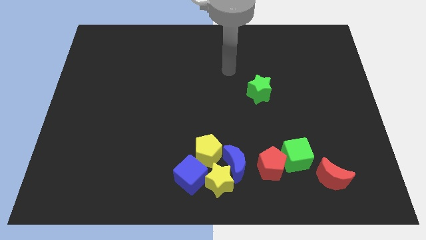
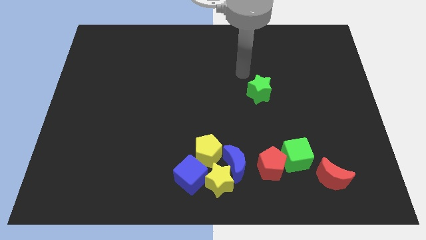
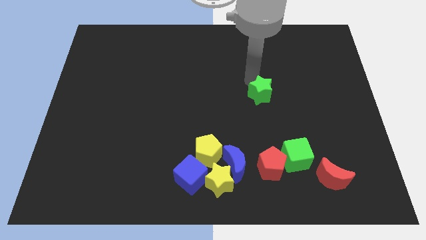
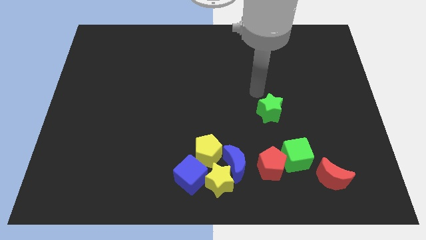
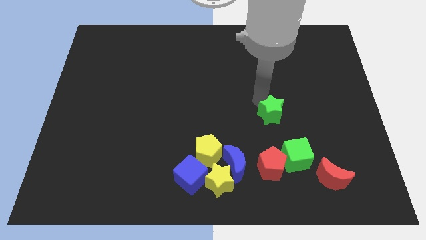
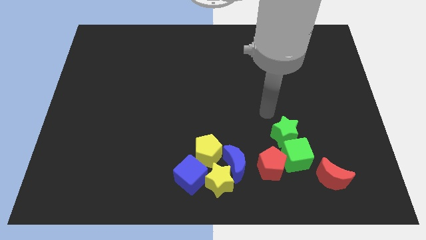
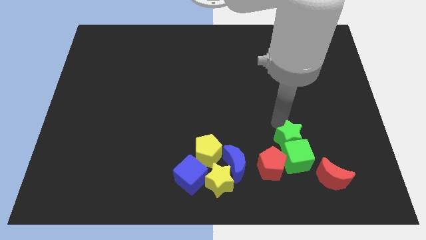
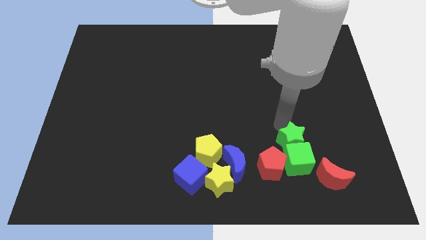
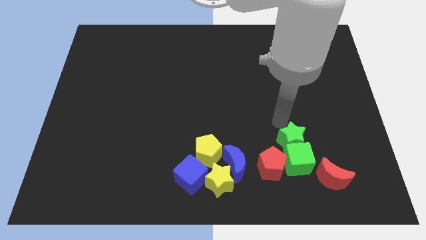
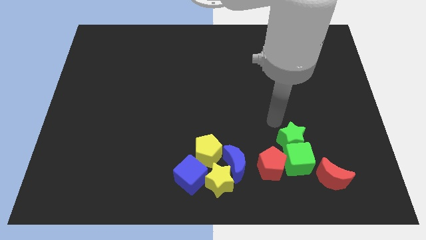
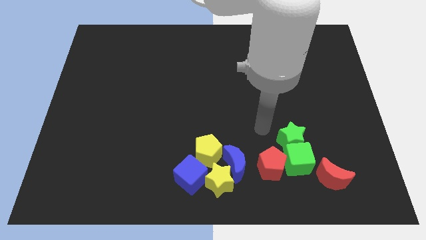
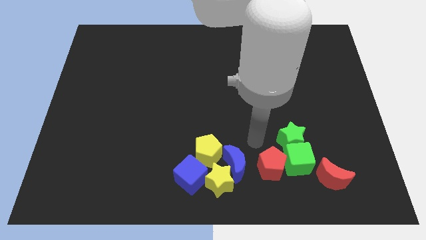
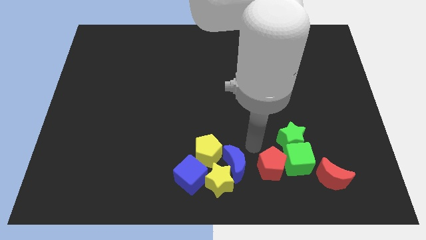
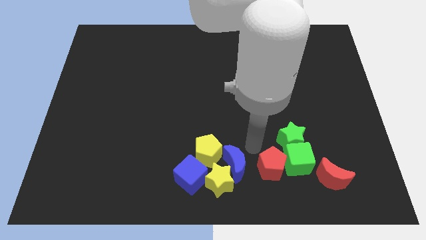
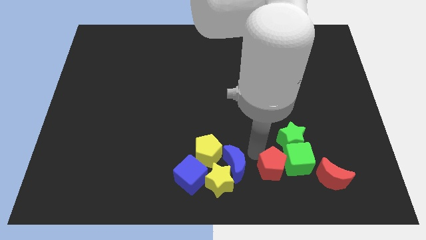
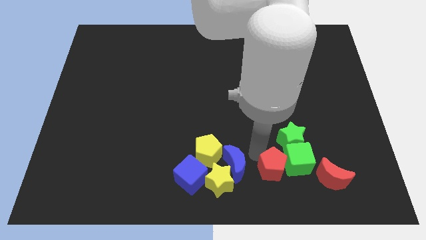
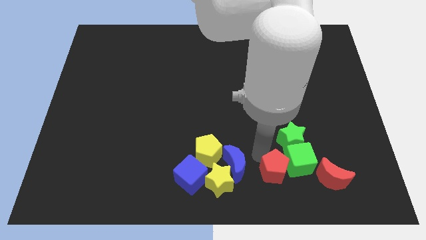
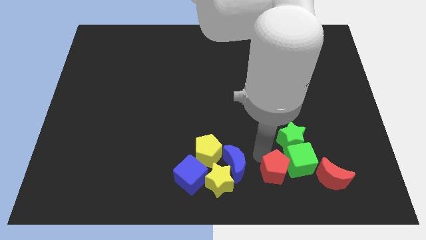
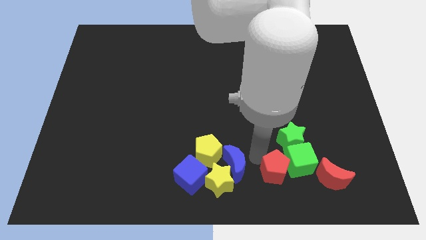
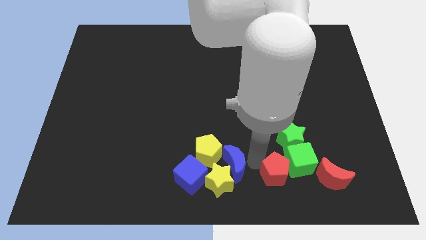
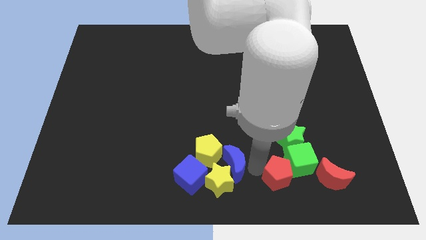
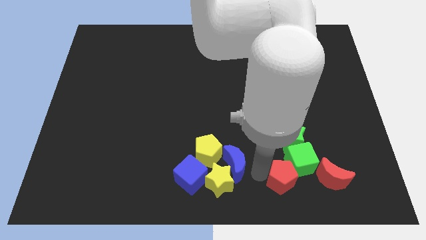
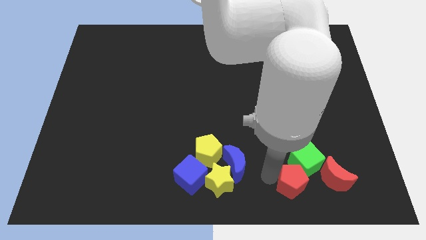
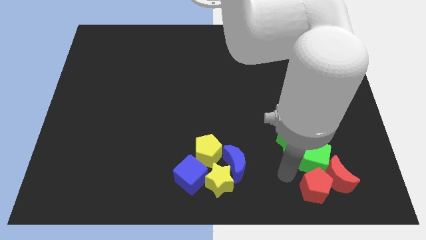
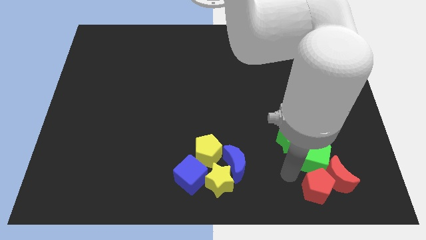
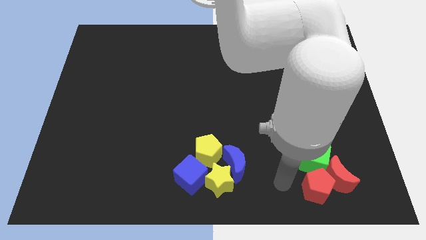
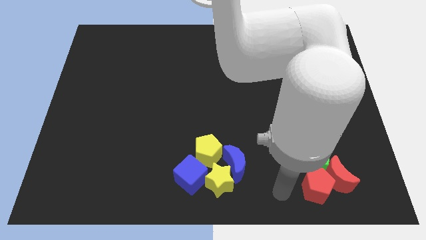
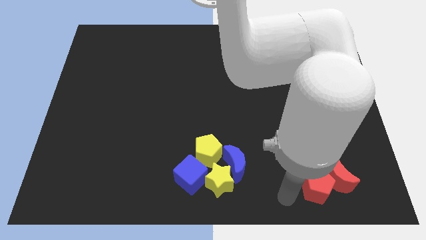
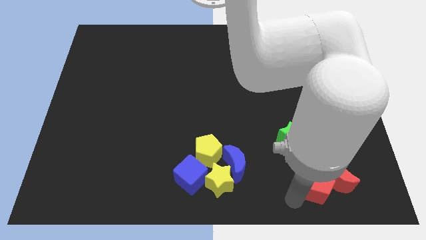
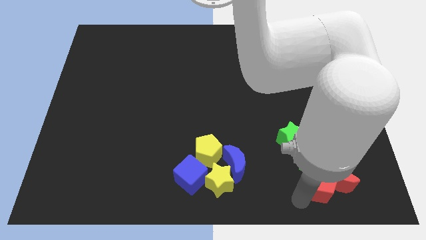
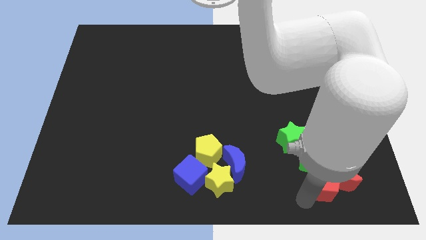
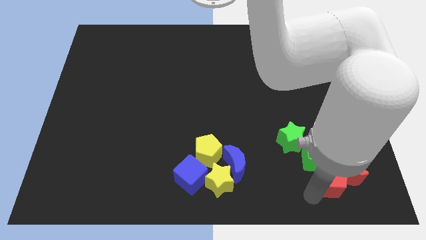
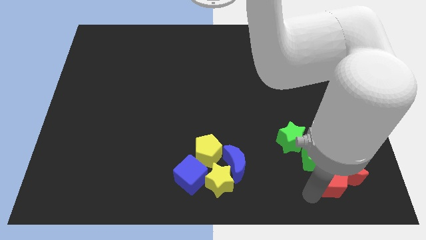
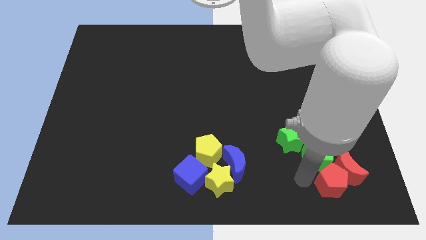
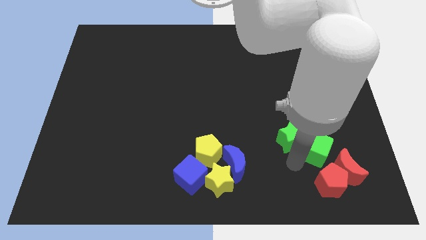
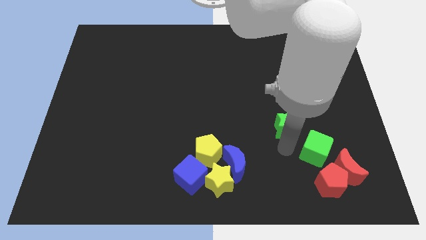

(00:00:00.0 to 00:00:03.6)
place the red blocks at the bottom of the green blocks

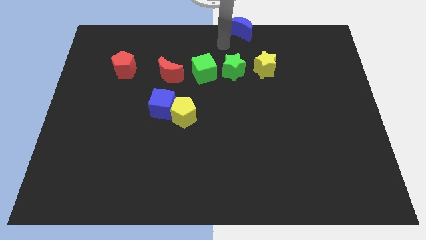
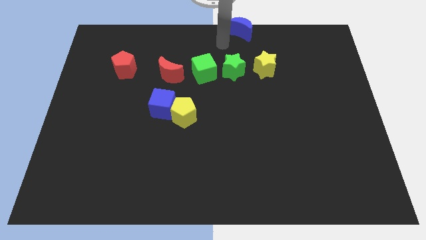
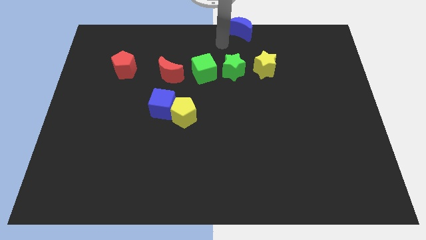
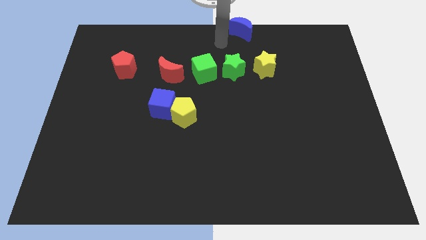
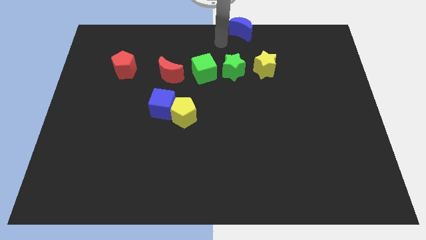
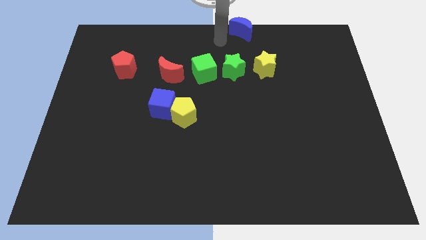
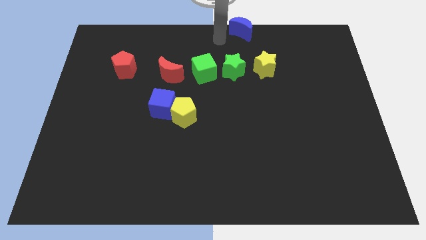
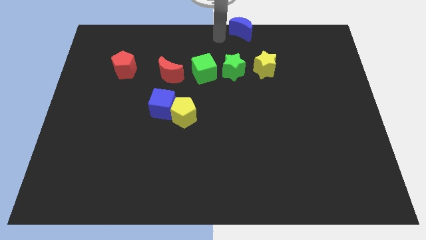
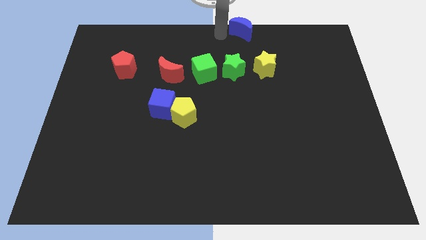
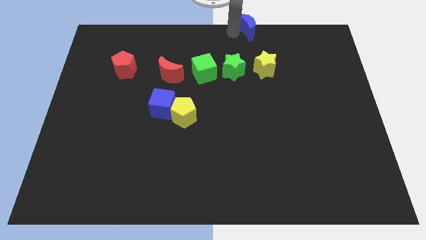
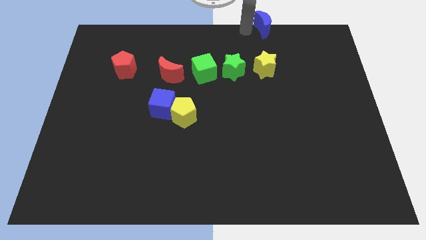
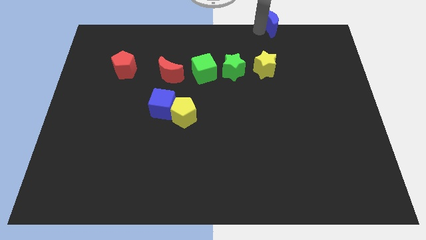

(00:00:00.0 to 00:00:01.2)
slide the blue moon vertically above the yellow star

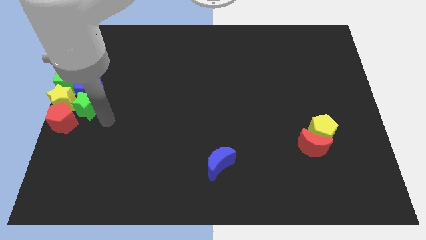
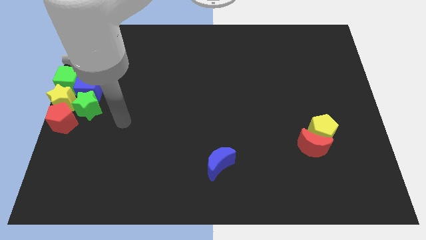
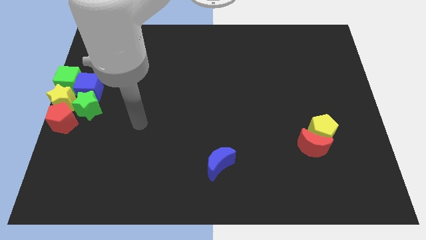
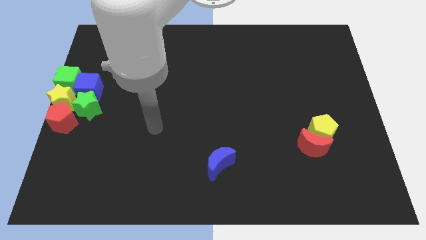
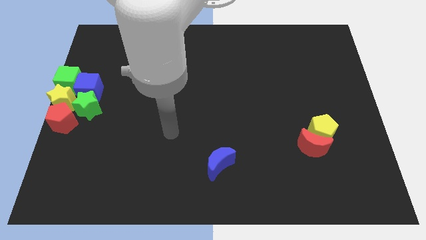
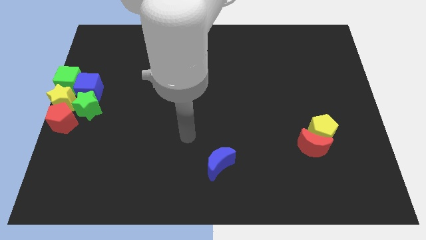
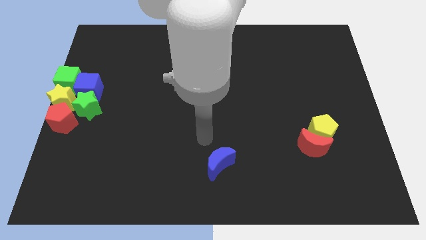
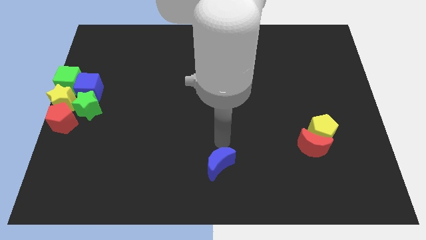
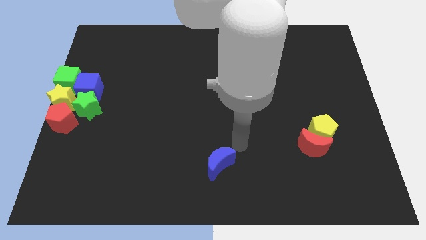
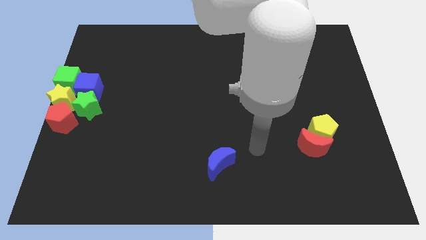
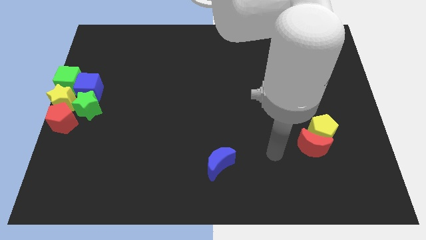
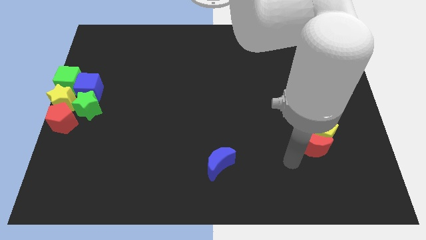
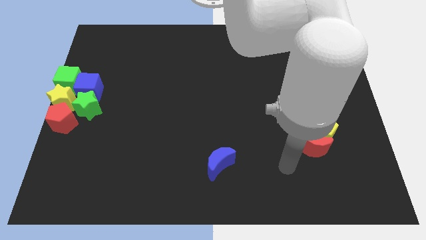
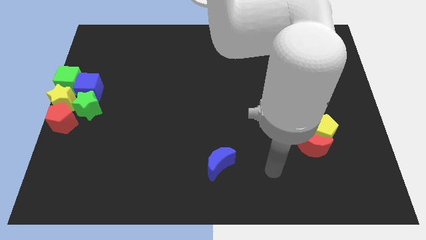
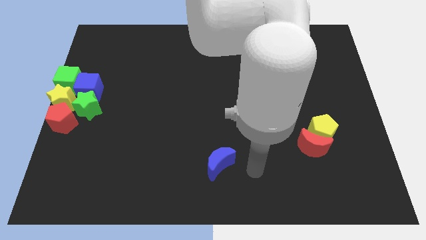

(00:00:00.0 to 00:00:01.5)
point your arm at the right of the blue crescent

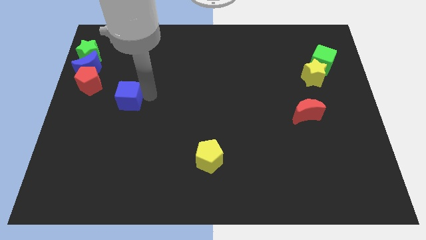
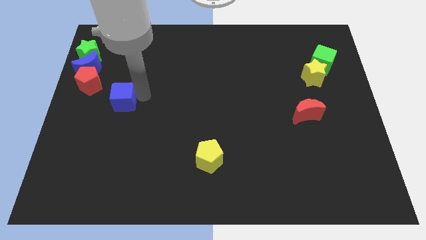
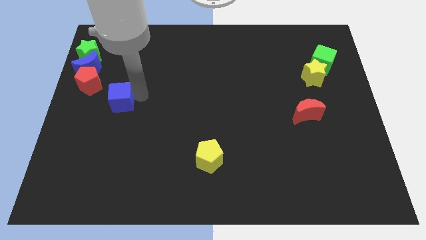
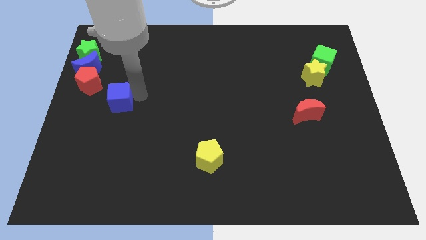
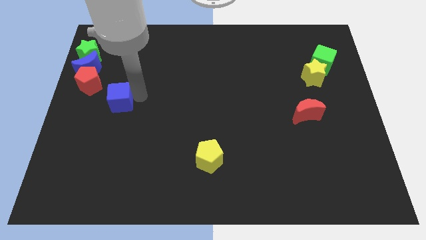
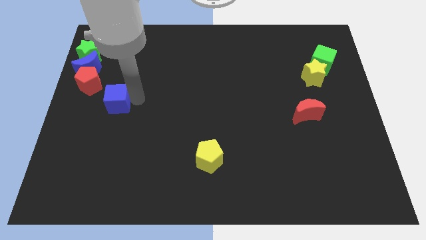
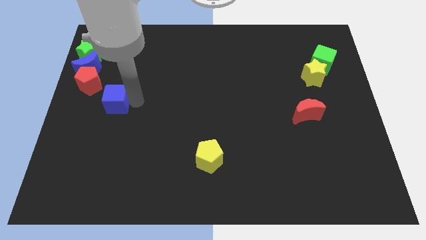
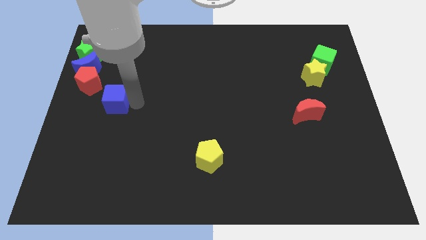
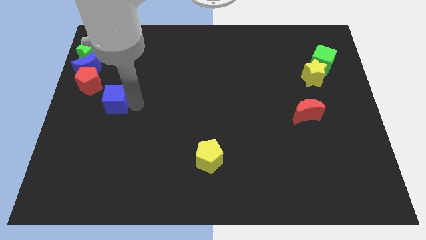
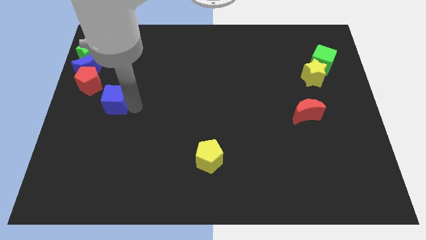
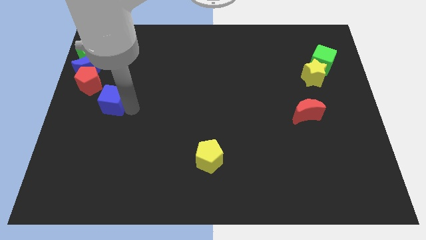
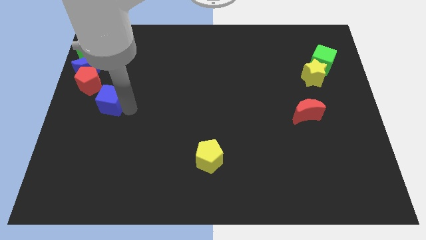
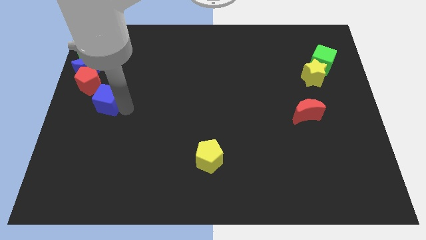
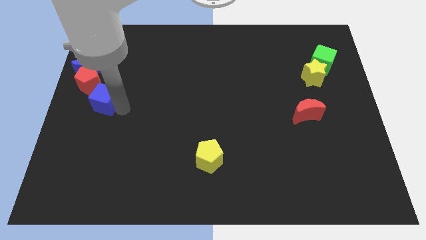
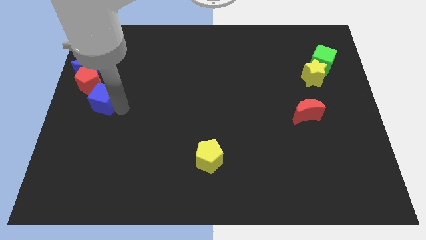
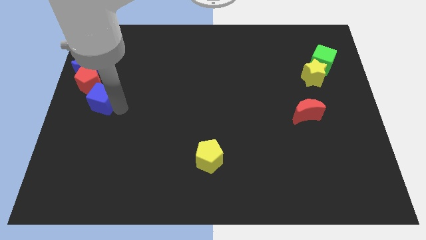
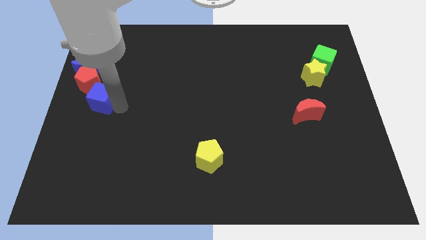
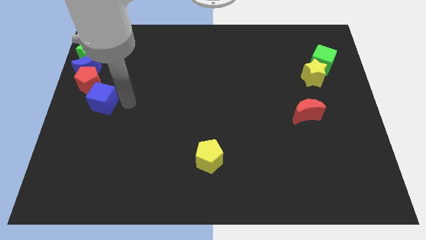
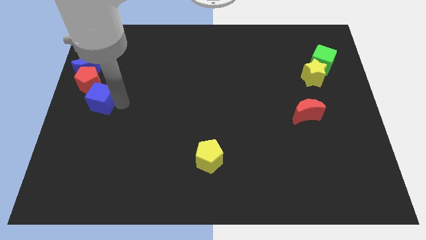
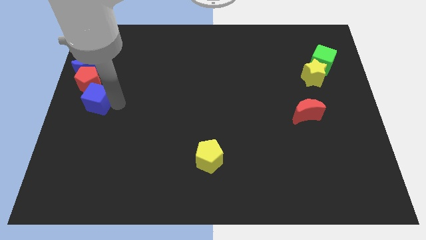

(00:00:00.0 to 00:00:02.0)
place the blue cube below the red pentagon

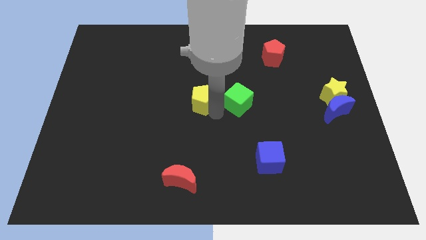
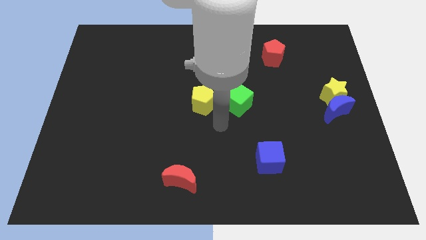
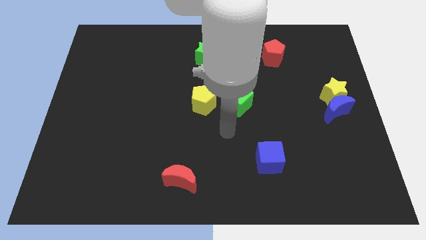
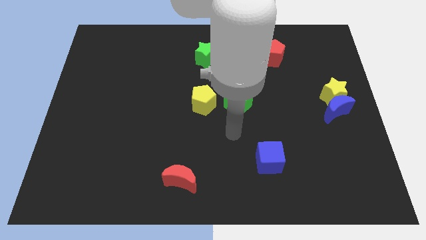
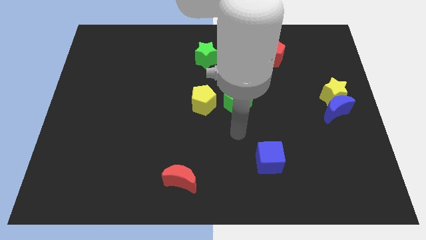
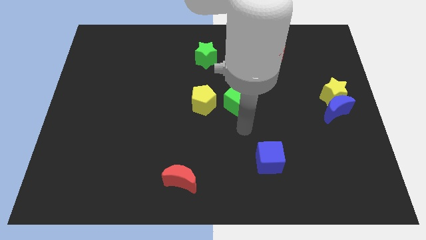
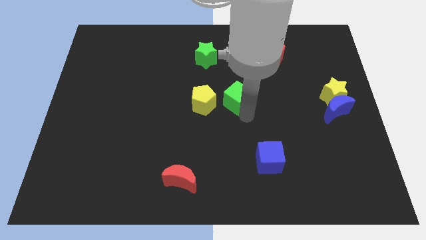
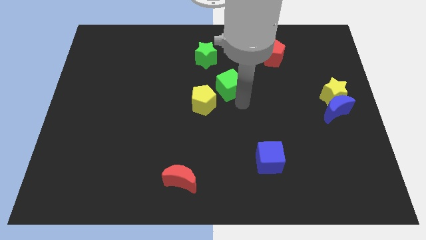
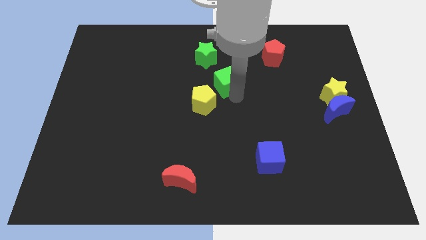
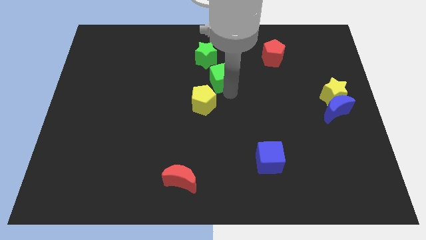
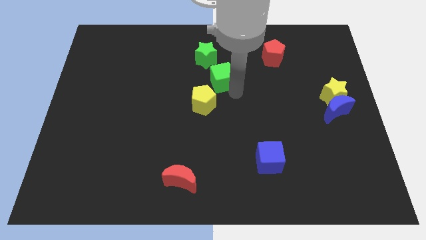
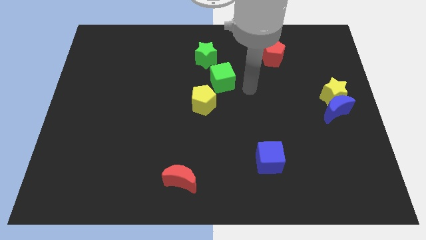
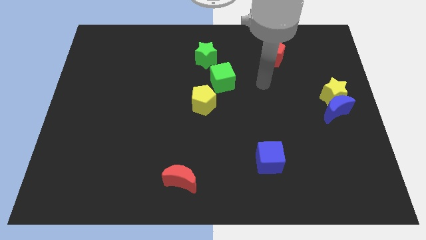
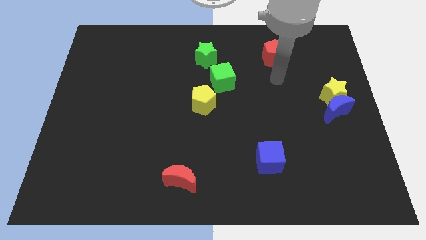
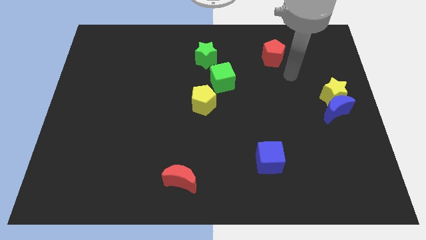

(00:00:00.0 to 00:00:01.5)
move the green cube slightly up
